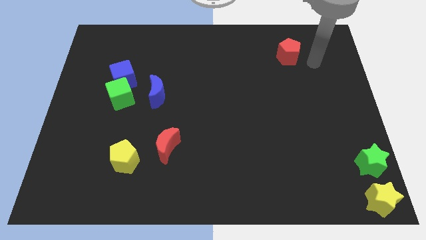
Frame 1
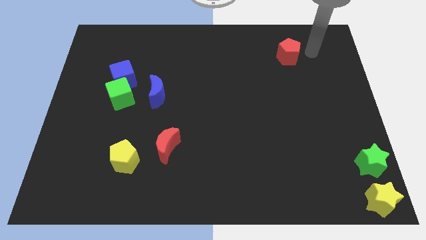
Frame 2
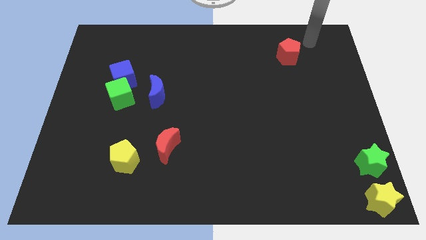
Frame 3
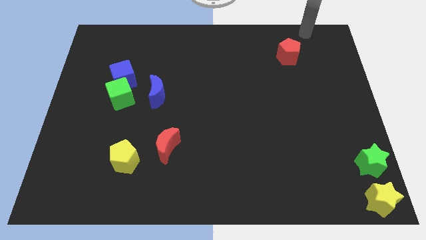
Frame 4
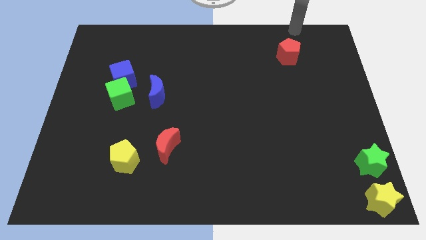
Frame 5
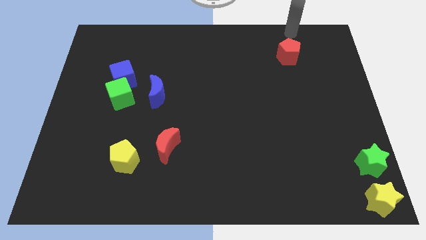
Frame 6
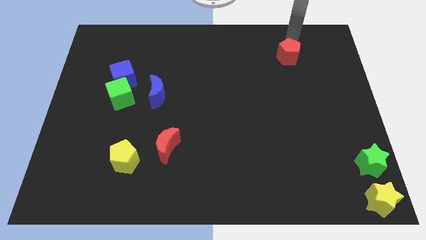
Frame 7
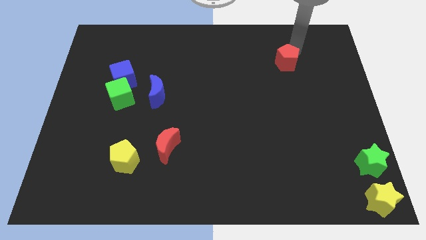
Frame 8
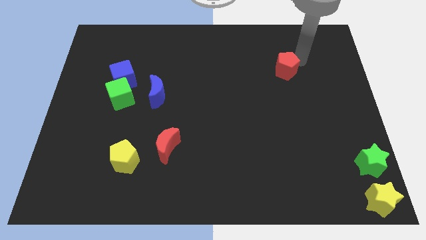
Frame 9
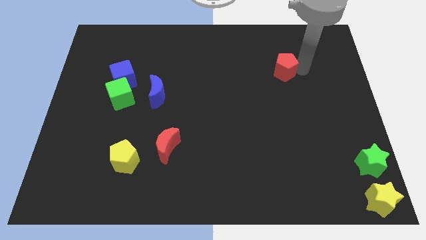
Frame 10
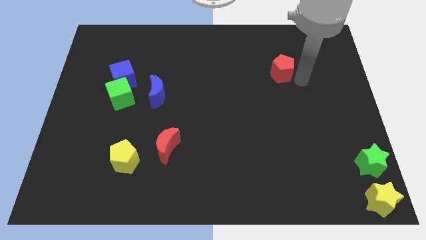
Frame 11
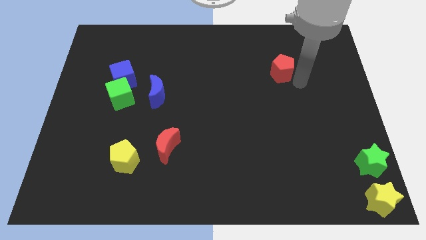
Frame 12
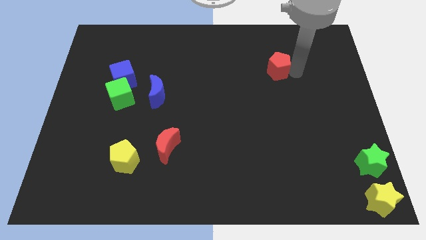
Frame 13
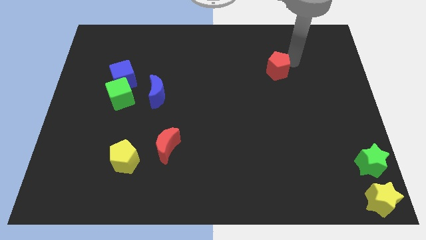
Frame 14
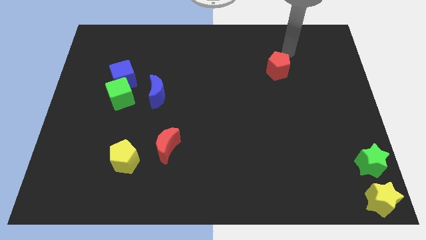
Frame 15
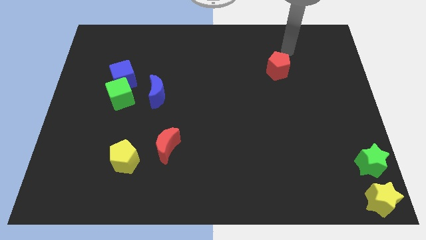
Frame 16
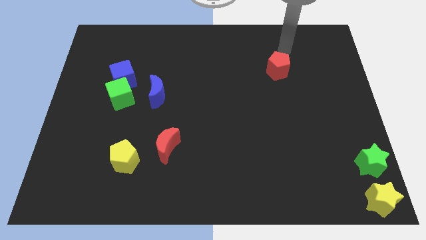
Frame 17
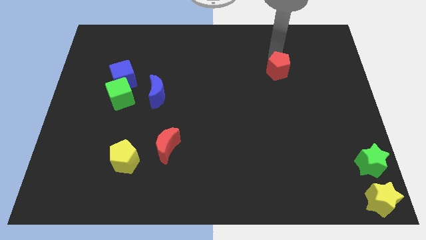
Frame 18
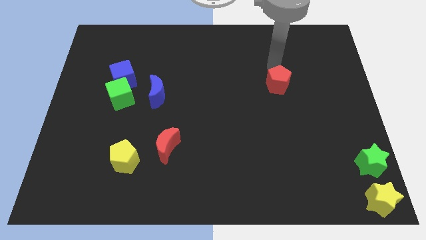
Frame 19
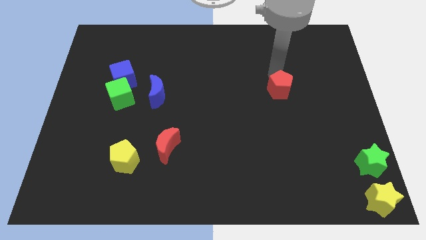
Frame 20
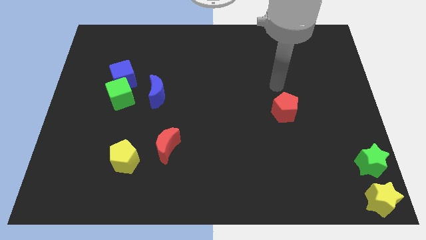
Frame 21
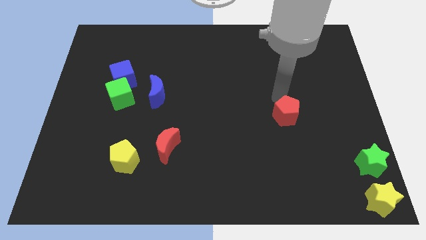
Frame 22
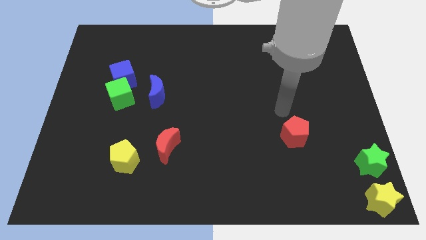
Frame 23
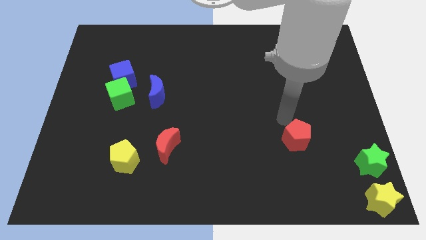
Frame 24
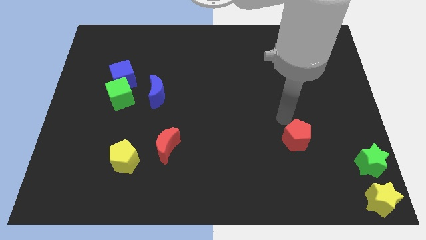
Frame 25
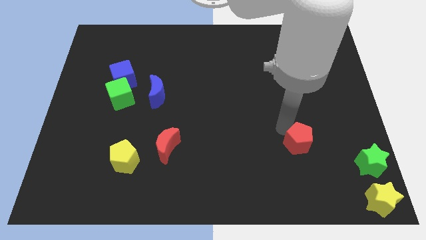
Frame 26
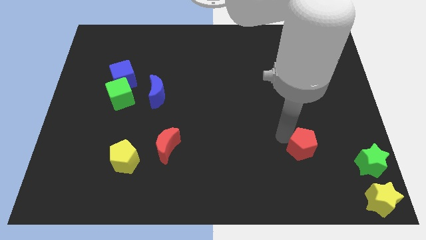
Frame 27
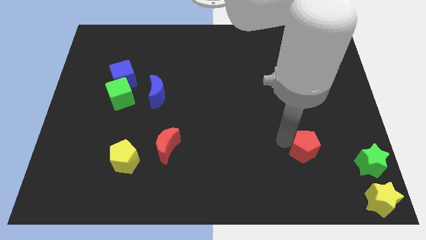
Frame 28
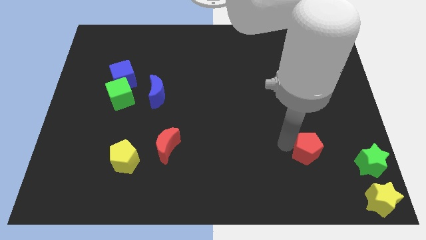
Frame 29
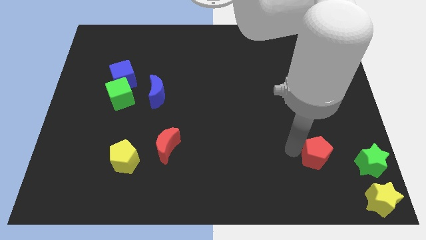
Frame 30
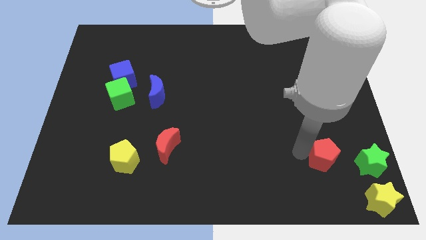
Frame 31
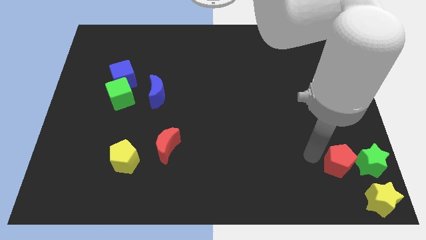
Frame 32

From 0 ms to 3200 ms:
push the red pentagon to the left side of the green star

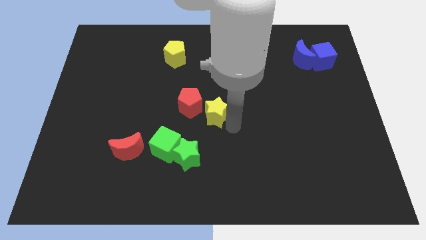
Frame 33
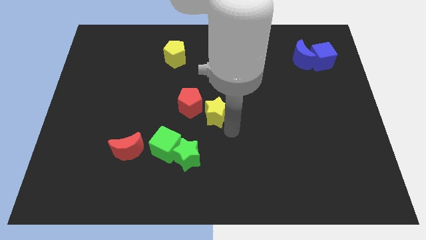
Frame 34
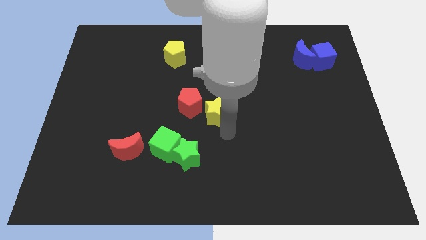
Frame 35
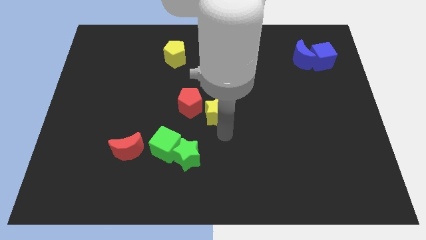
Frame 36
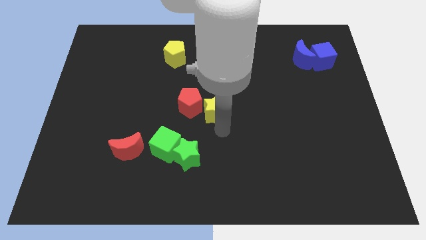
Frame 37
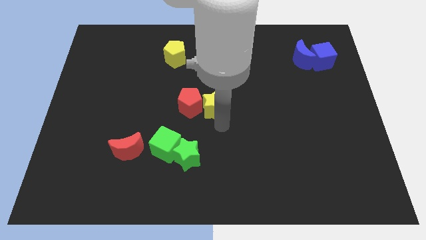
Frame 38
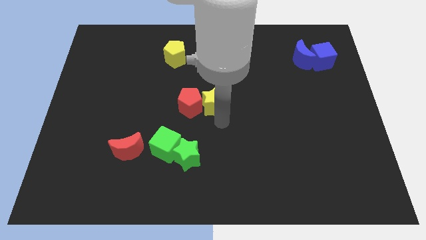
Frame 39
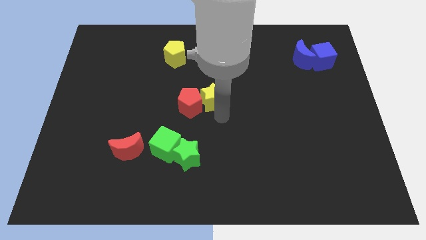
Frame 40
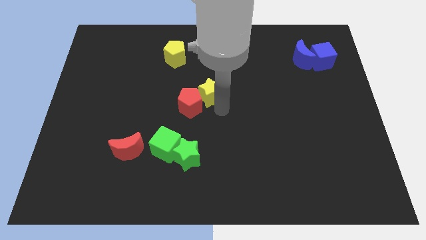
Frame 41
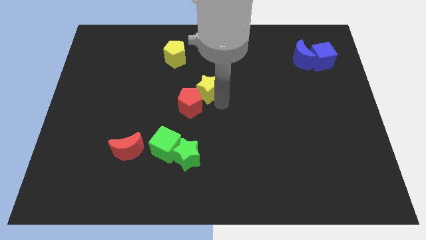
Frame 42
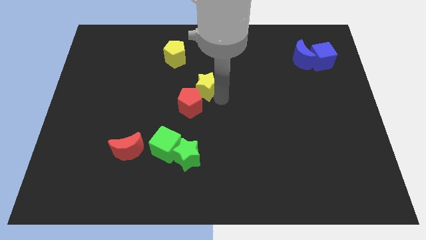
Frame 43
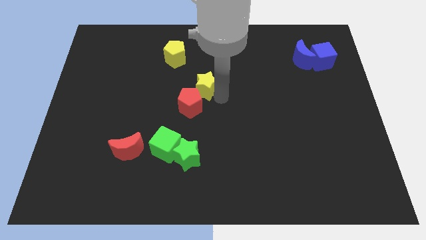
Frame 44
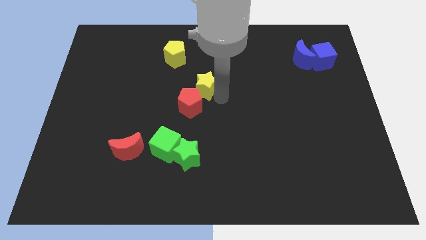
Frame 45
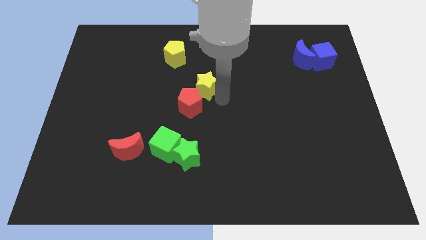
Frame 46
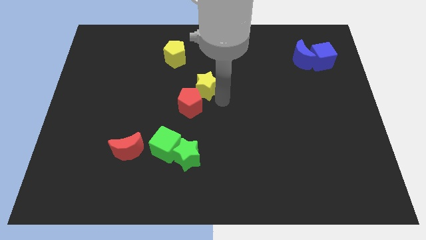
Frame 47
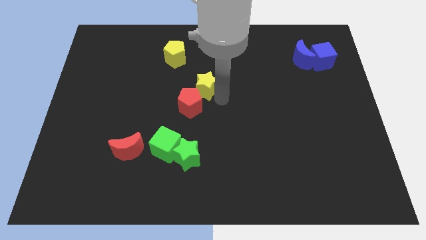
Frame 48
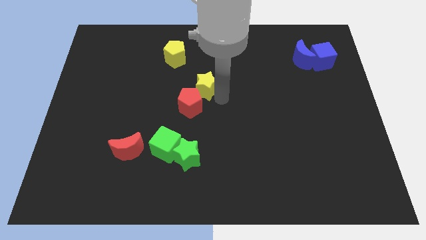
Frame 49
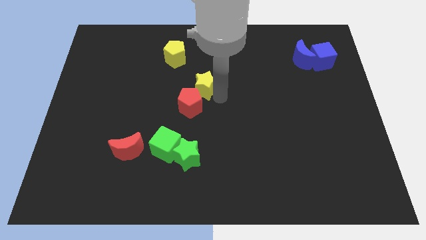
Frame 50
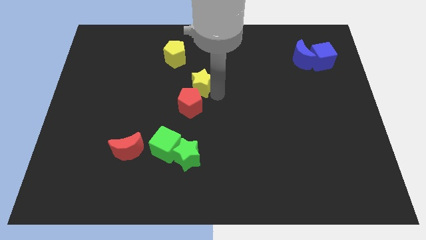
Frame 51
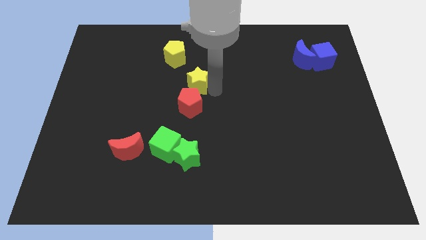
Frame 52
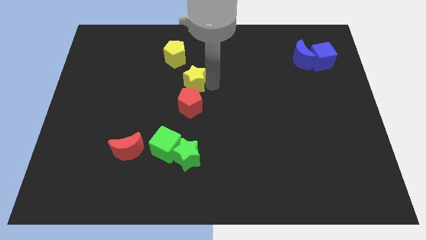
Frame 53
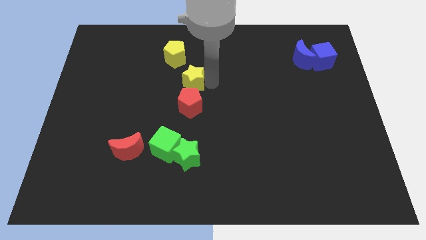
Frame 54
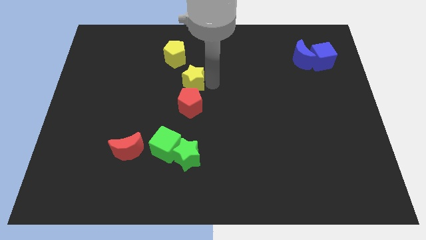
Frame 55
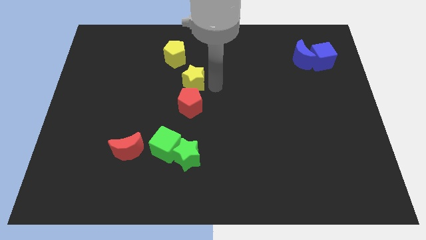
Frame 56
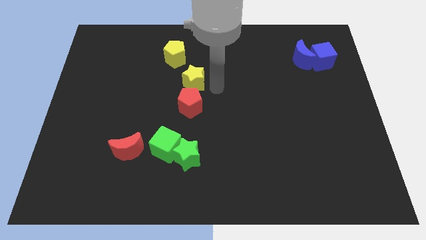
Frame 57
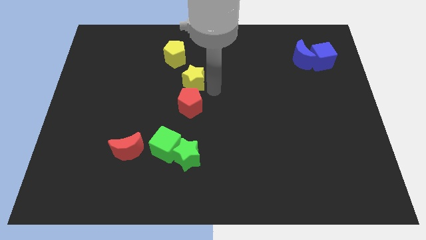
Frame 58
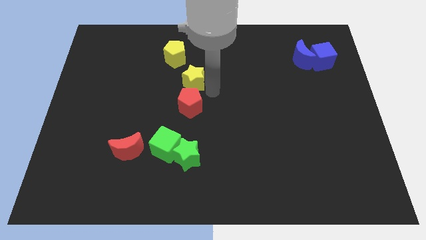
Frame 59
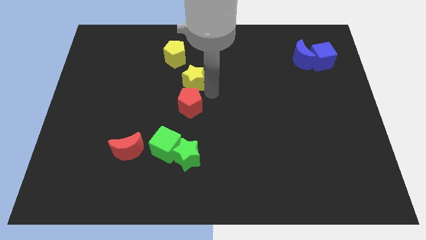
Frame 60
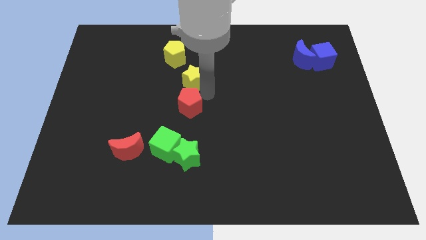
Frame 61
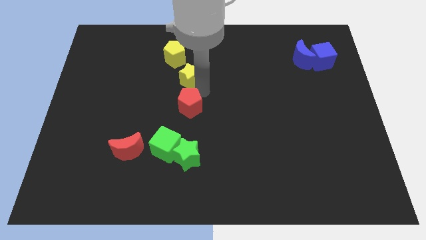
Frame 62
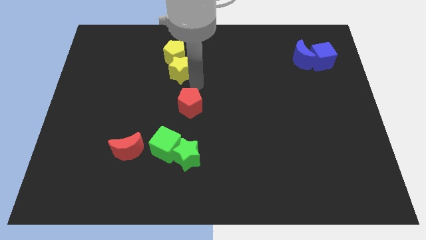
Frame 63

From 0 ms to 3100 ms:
push yellow star to the bottom of yellow pentagon

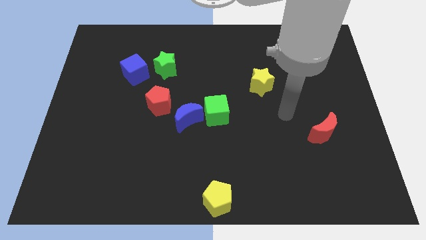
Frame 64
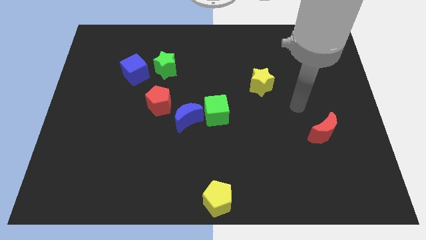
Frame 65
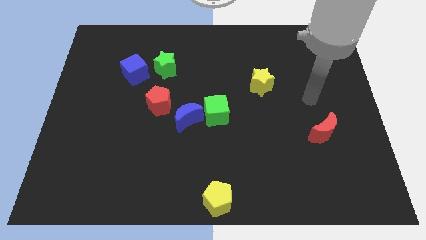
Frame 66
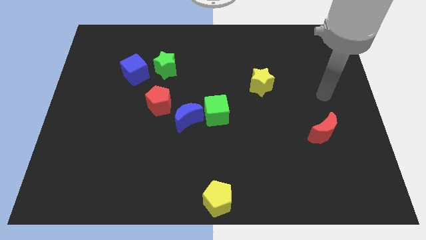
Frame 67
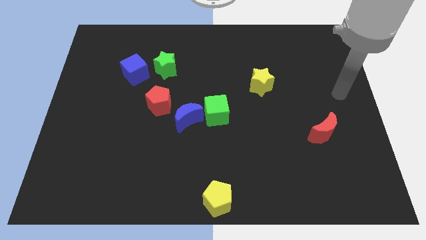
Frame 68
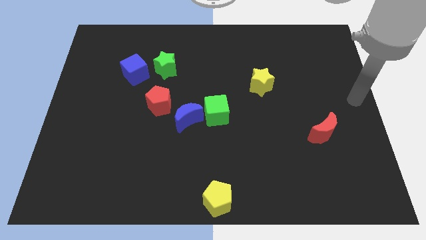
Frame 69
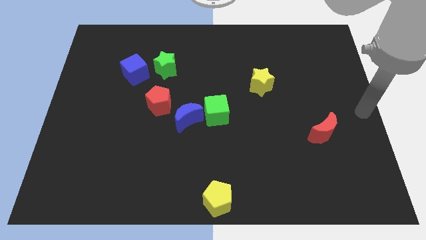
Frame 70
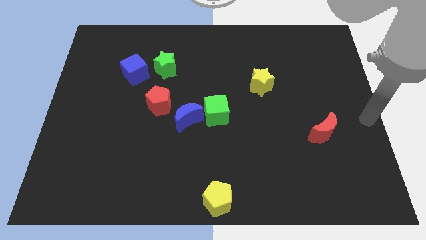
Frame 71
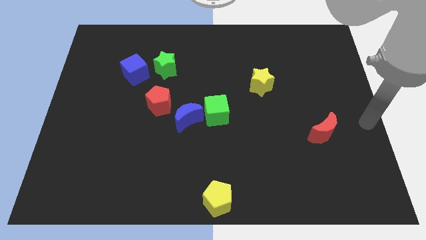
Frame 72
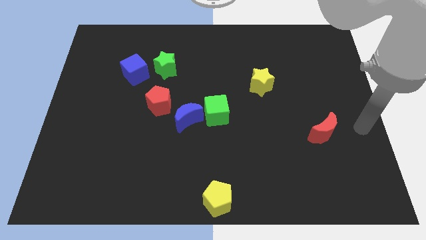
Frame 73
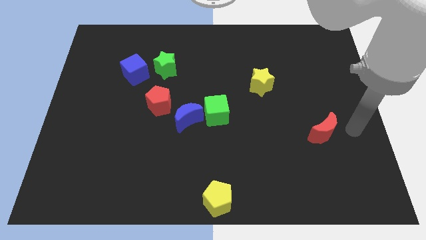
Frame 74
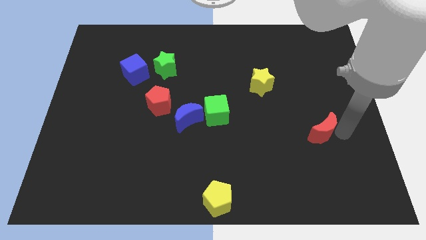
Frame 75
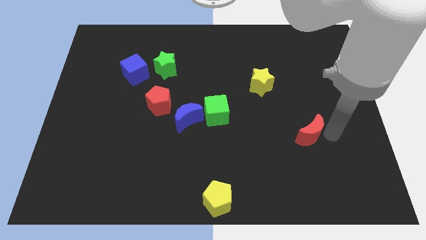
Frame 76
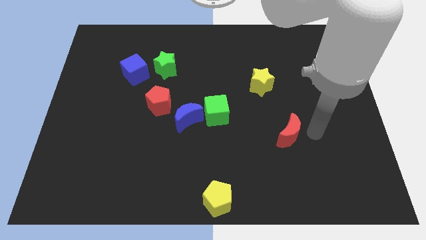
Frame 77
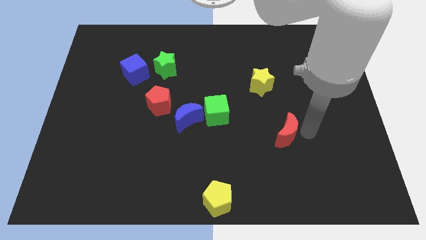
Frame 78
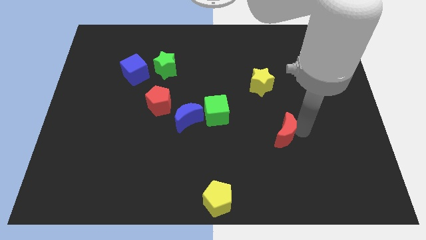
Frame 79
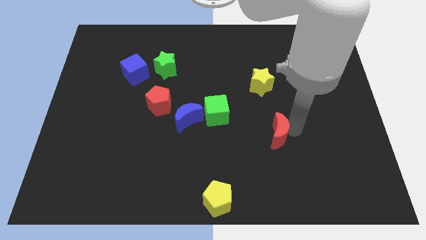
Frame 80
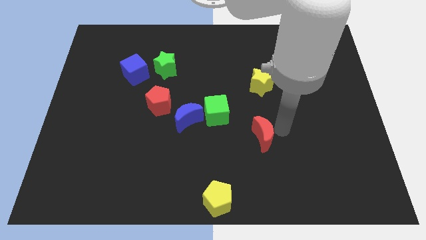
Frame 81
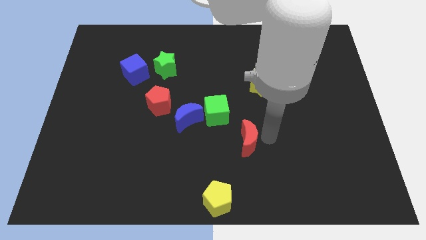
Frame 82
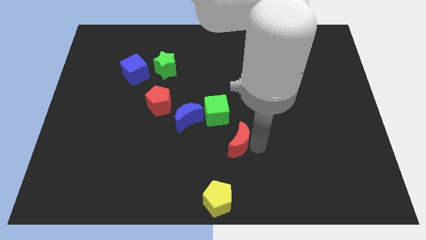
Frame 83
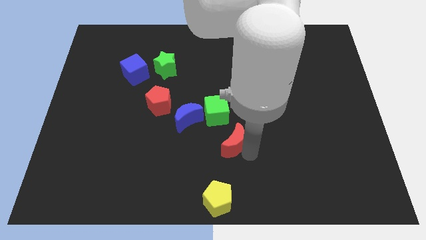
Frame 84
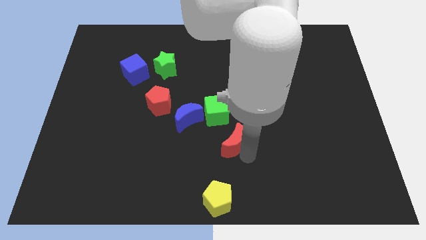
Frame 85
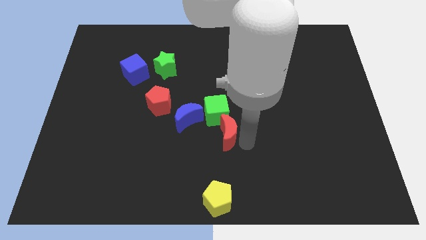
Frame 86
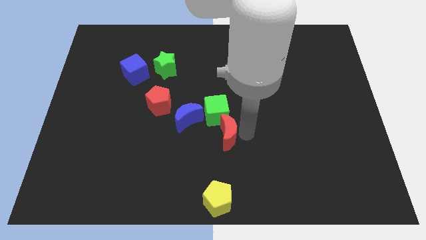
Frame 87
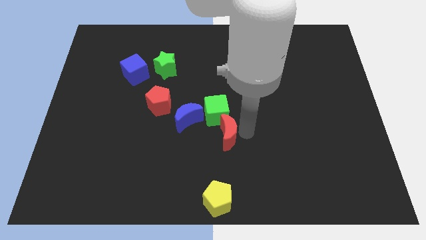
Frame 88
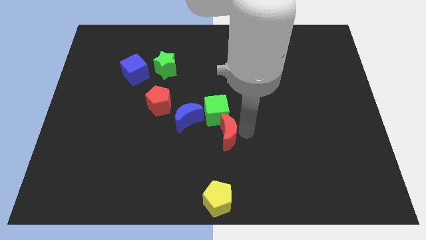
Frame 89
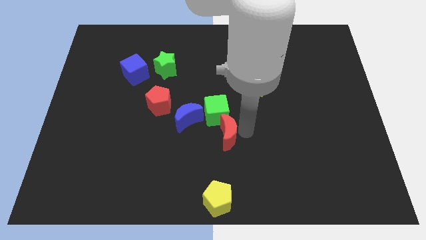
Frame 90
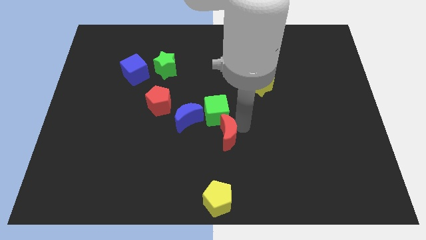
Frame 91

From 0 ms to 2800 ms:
move the red moon diagonally top right to yellow pentagon
